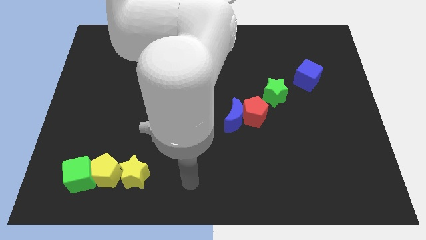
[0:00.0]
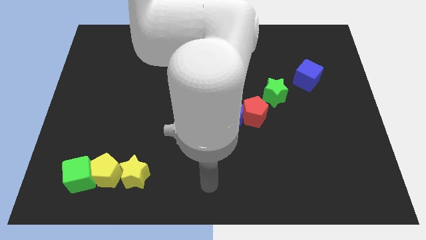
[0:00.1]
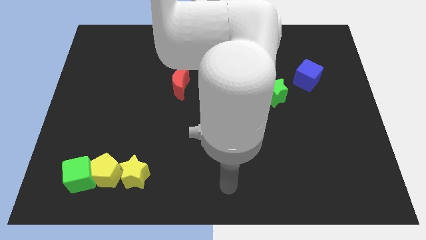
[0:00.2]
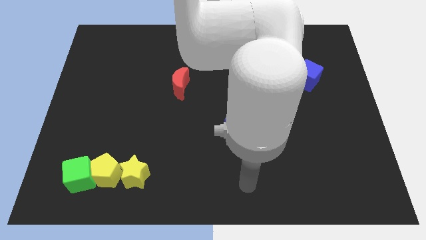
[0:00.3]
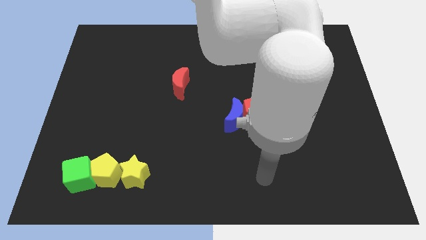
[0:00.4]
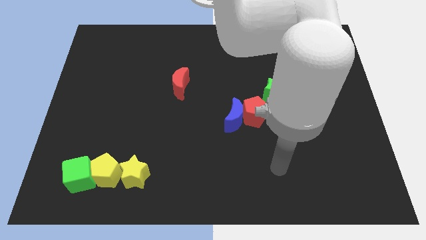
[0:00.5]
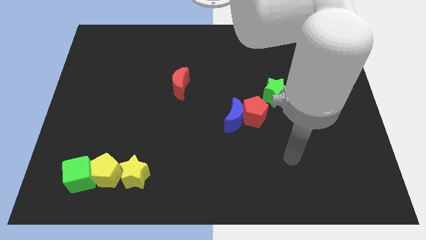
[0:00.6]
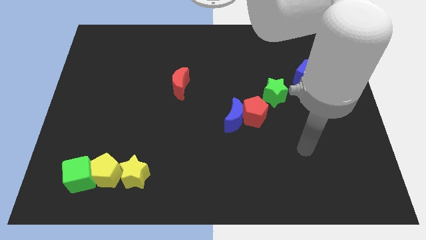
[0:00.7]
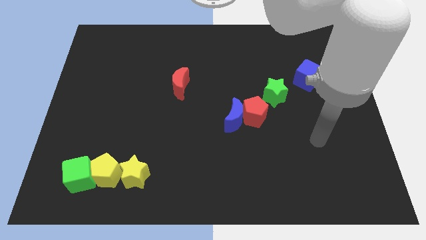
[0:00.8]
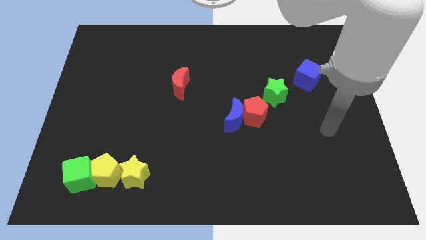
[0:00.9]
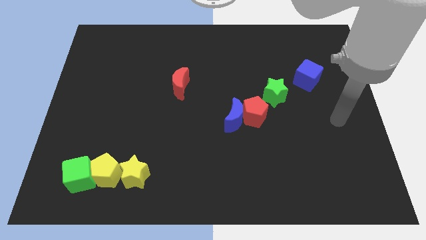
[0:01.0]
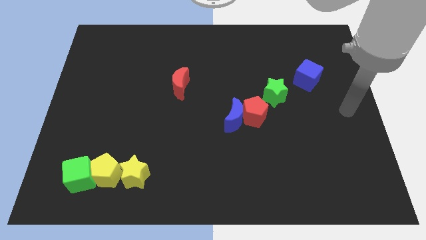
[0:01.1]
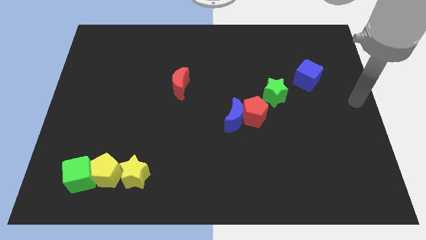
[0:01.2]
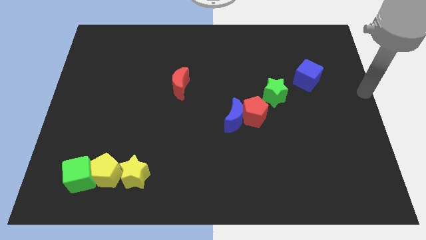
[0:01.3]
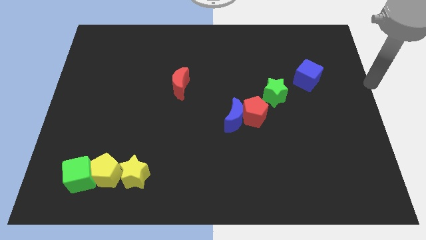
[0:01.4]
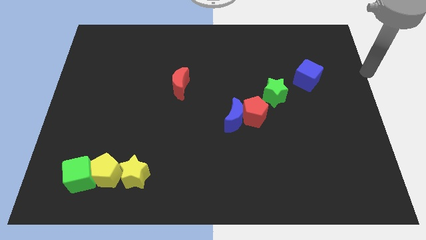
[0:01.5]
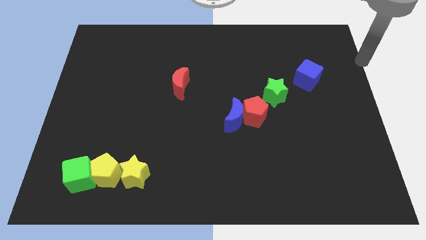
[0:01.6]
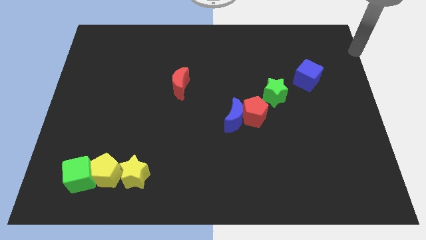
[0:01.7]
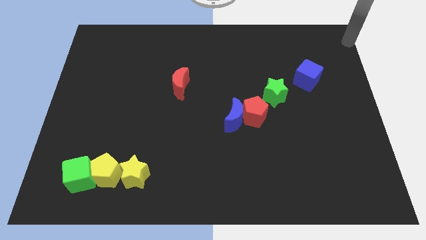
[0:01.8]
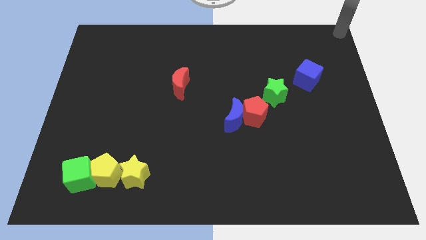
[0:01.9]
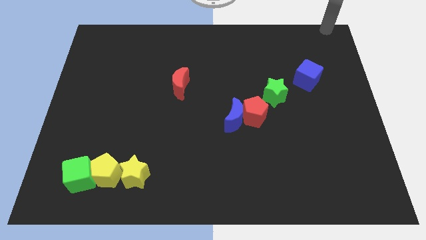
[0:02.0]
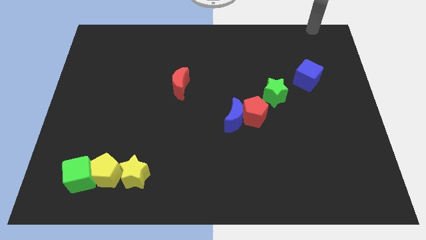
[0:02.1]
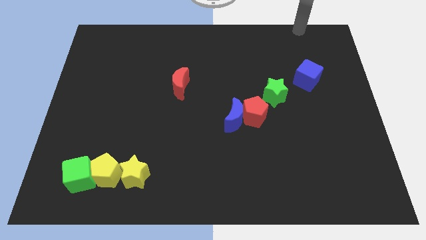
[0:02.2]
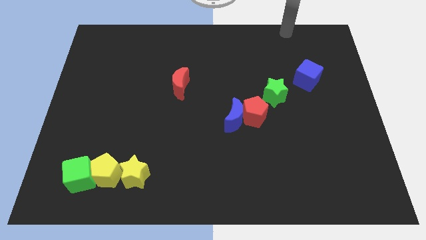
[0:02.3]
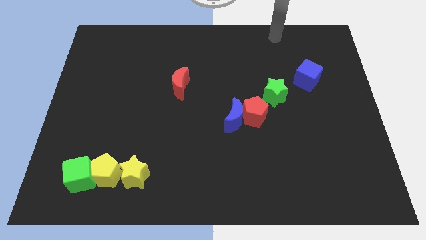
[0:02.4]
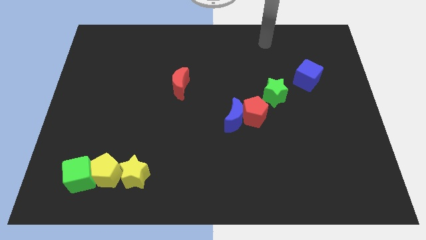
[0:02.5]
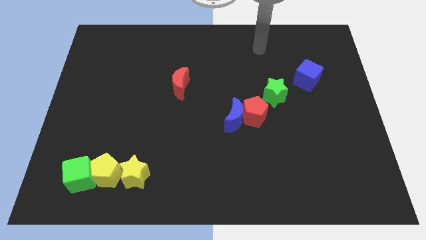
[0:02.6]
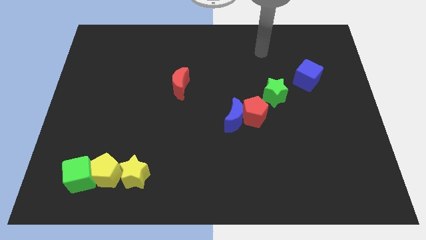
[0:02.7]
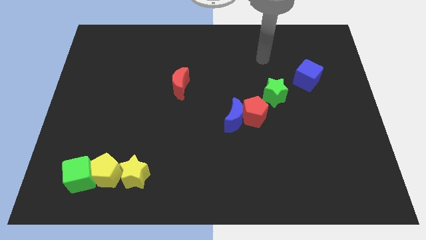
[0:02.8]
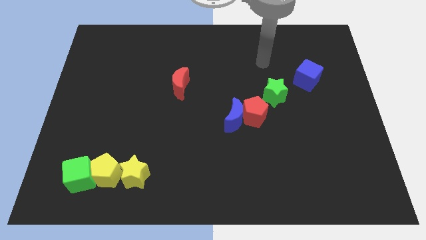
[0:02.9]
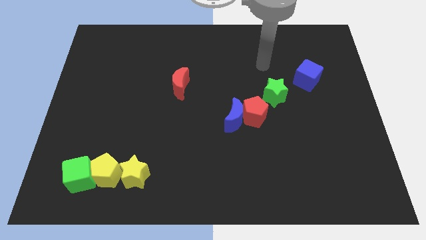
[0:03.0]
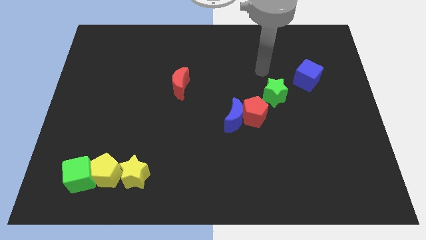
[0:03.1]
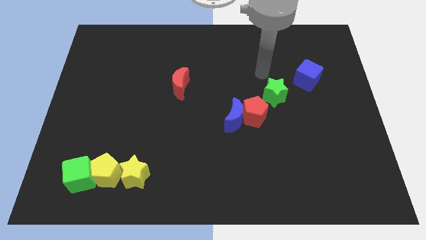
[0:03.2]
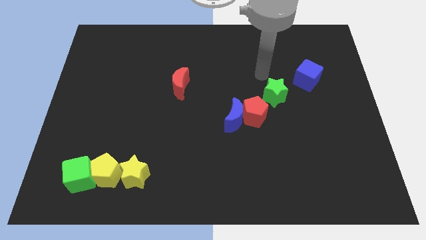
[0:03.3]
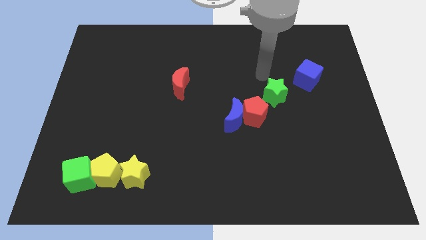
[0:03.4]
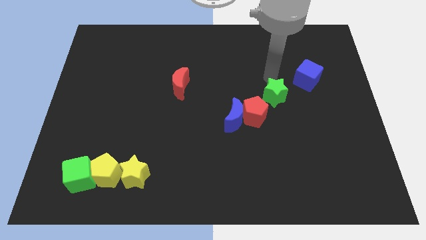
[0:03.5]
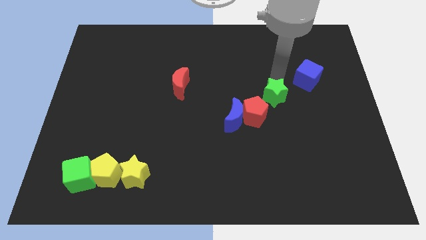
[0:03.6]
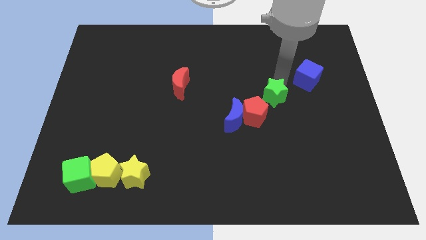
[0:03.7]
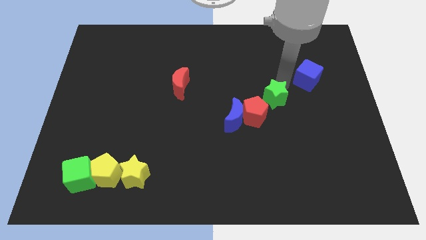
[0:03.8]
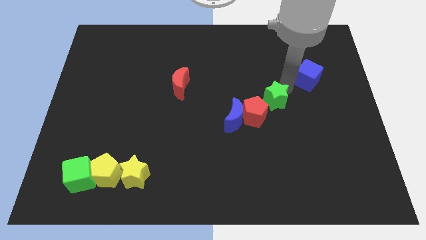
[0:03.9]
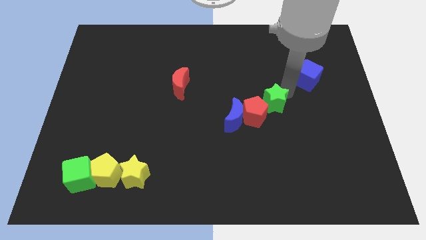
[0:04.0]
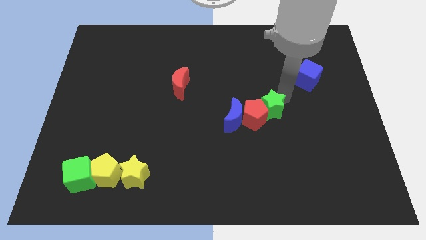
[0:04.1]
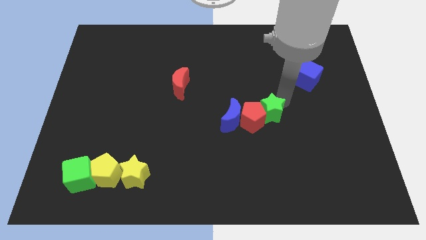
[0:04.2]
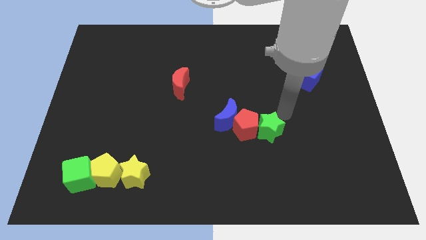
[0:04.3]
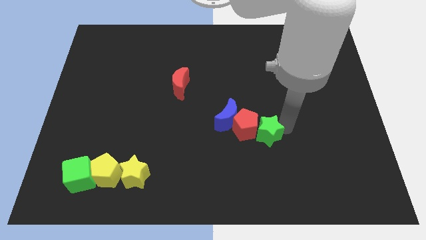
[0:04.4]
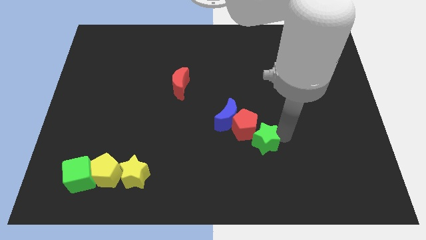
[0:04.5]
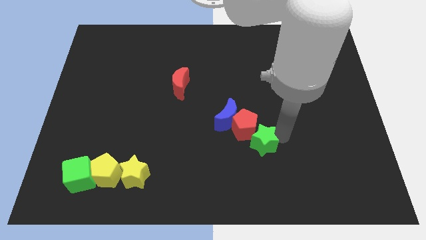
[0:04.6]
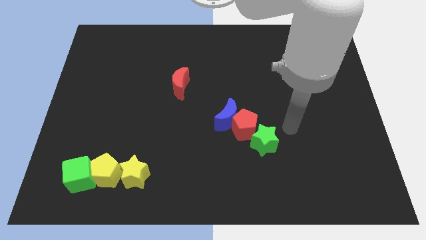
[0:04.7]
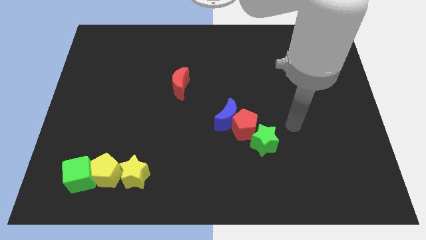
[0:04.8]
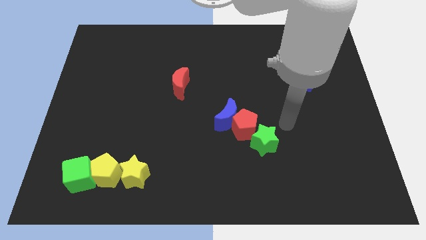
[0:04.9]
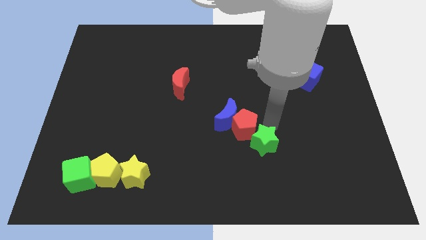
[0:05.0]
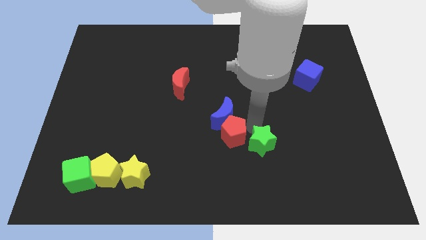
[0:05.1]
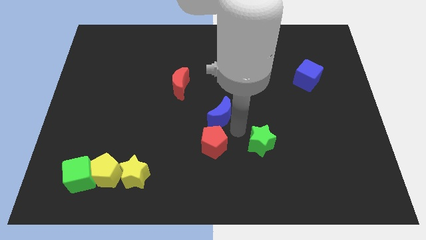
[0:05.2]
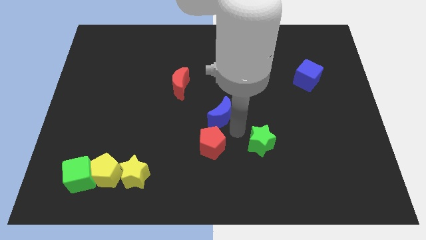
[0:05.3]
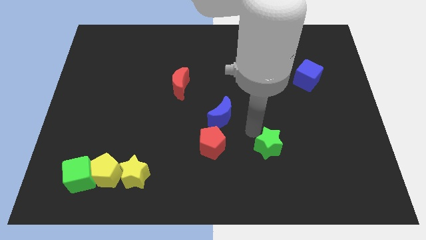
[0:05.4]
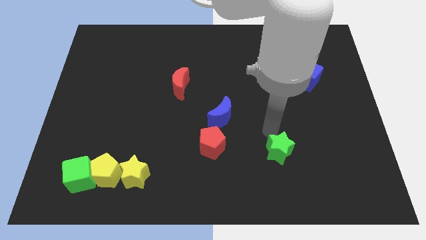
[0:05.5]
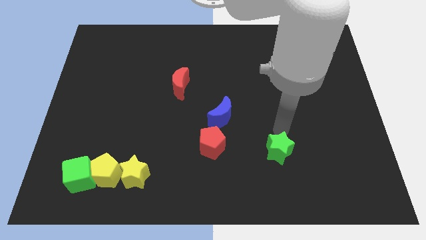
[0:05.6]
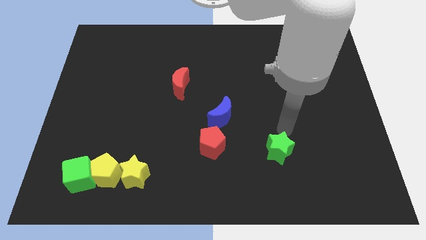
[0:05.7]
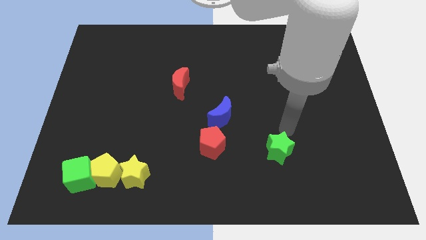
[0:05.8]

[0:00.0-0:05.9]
separate red pentagon and green star

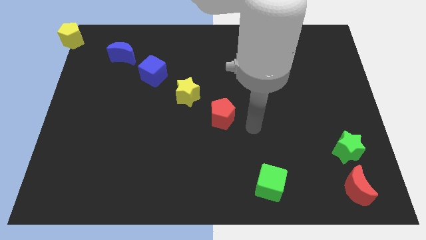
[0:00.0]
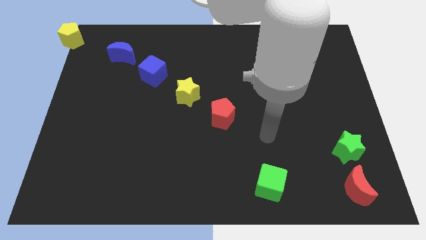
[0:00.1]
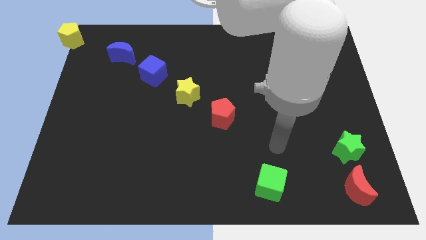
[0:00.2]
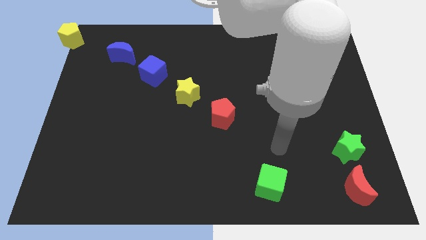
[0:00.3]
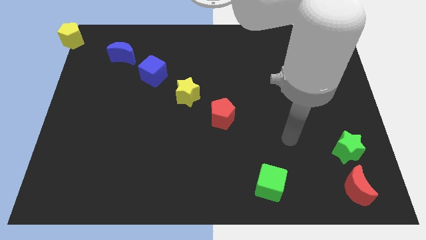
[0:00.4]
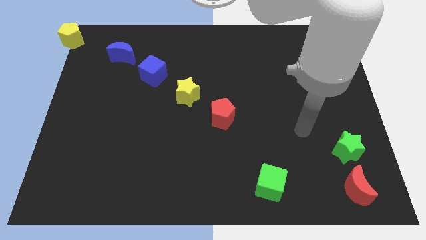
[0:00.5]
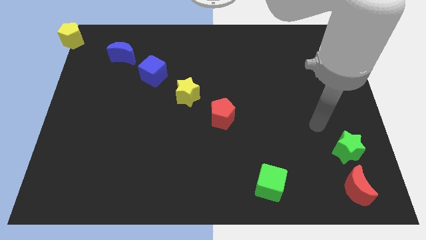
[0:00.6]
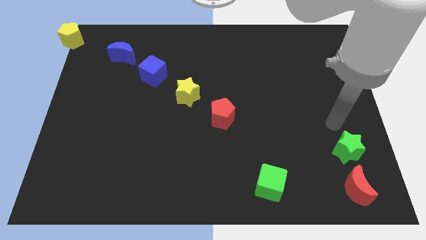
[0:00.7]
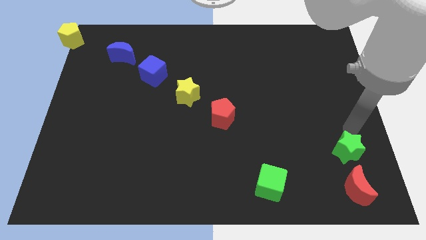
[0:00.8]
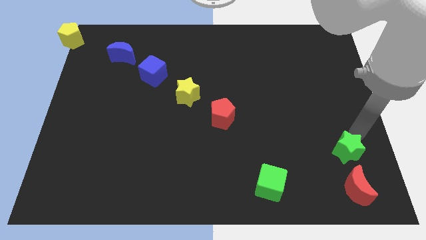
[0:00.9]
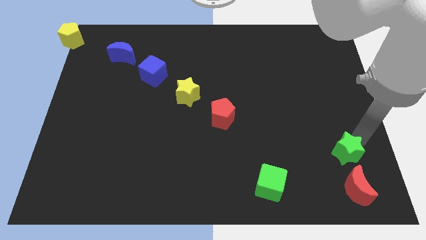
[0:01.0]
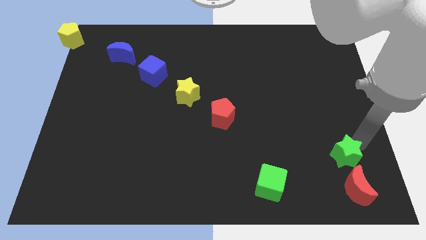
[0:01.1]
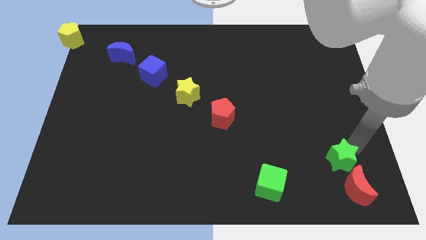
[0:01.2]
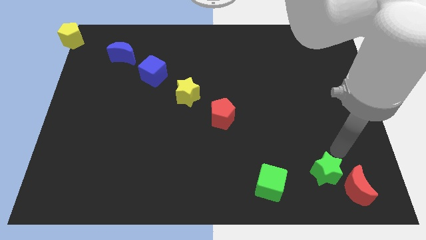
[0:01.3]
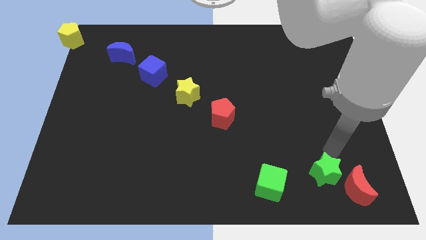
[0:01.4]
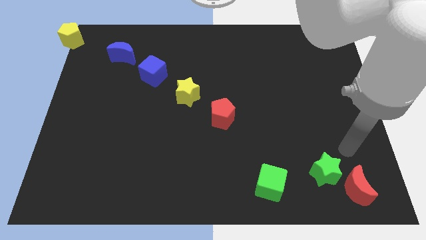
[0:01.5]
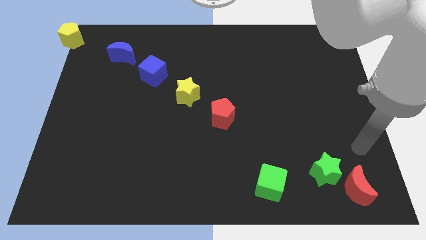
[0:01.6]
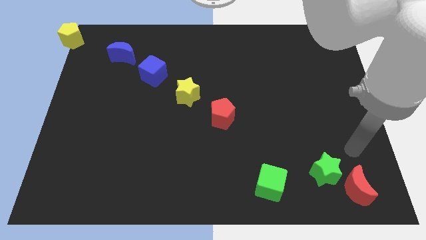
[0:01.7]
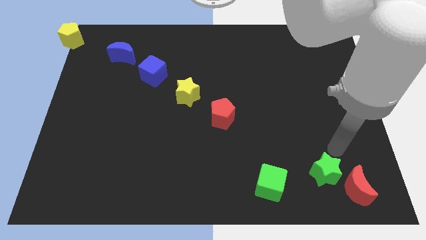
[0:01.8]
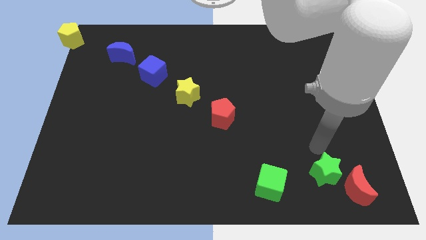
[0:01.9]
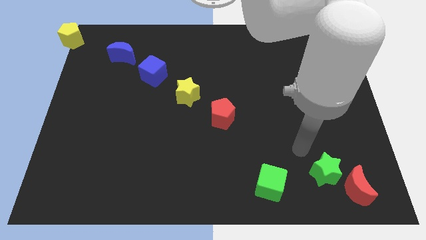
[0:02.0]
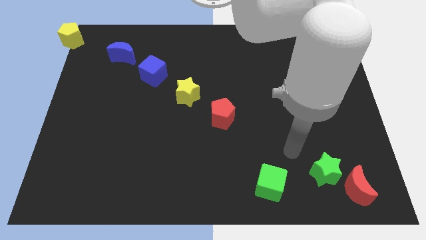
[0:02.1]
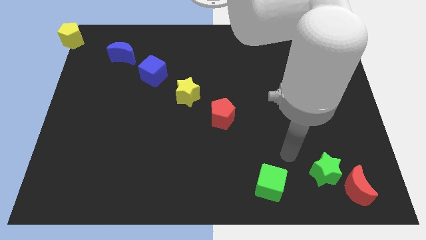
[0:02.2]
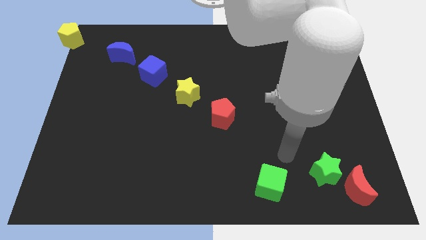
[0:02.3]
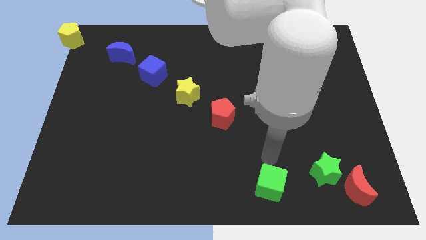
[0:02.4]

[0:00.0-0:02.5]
move the green star slightly to the downwards

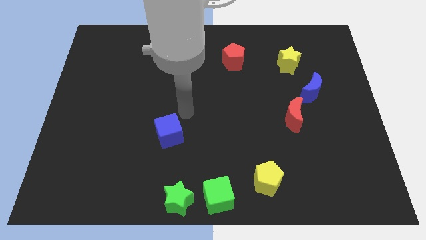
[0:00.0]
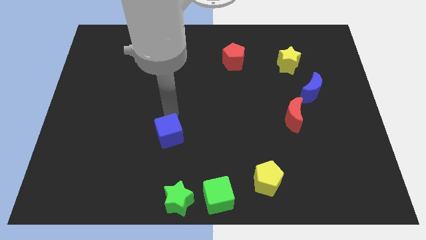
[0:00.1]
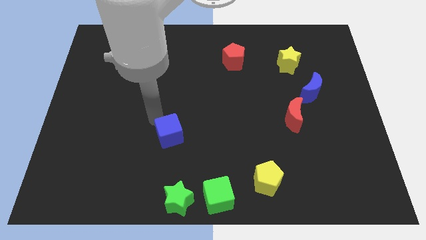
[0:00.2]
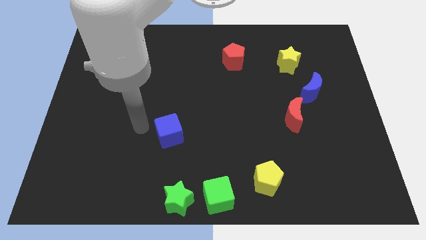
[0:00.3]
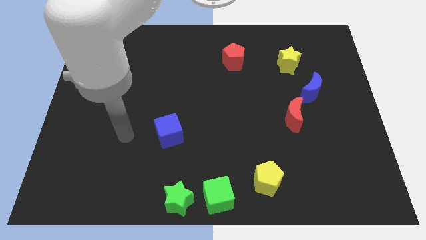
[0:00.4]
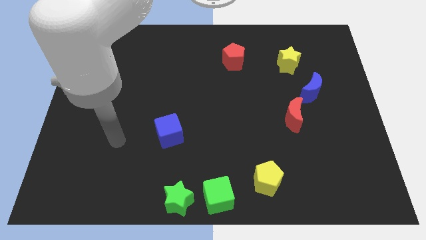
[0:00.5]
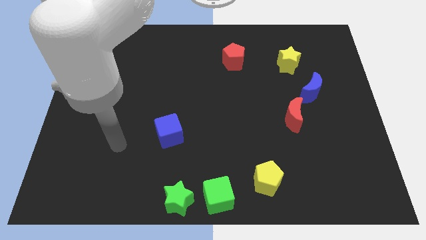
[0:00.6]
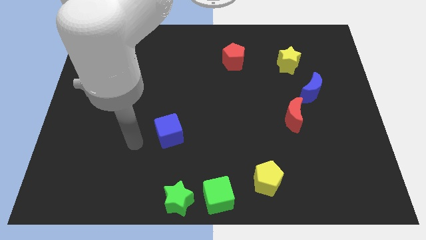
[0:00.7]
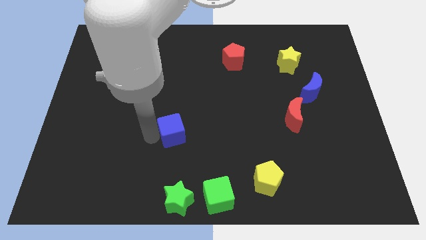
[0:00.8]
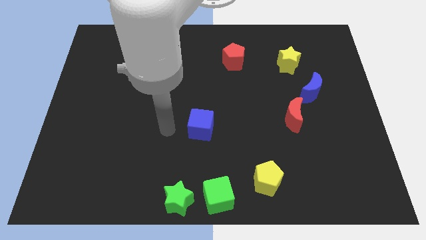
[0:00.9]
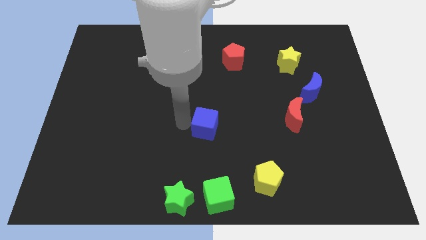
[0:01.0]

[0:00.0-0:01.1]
move the blue cube parallel to the top of the green cube
